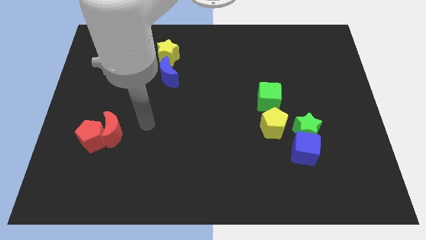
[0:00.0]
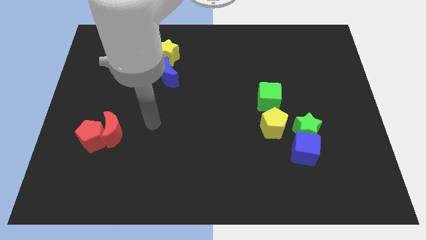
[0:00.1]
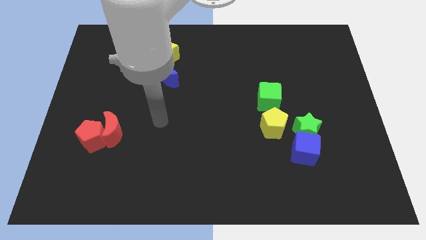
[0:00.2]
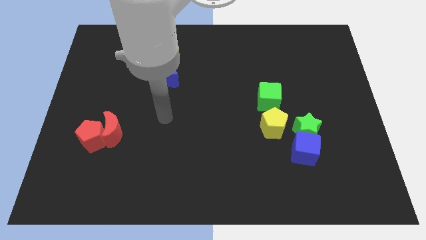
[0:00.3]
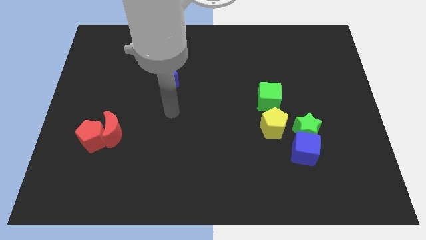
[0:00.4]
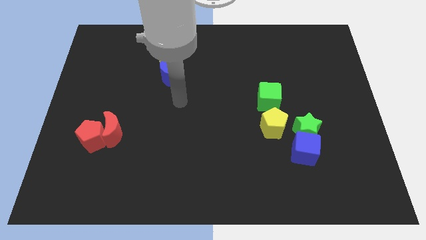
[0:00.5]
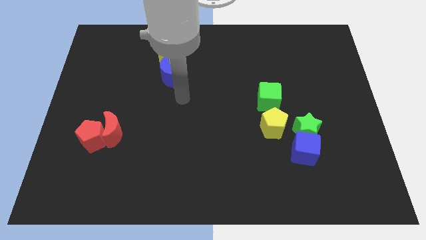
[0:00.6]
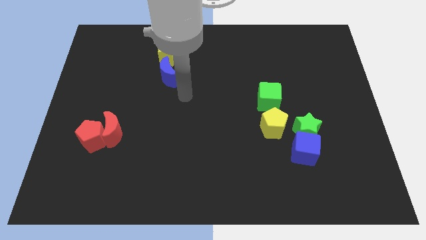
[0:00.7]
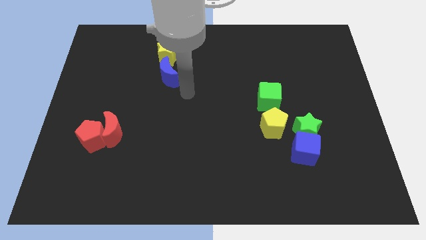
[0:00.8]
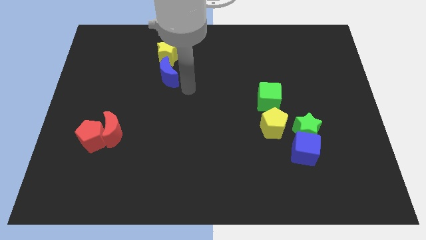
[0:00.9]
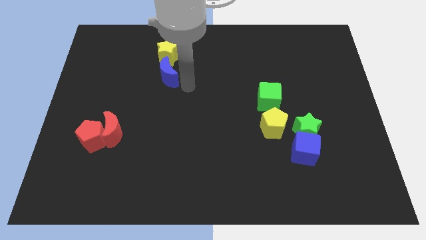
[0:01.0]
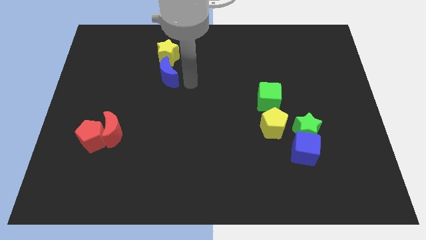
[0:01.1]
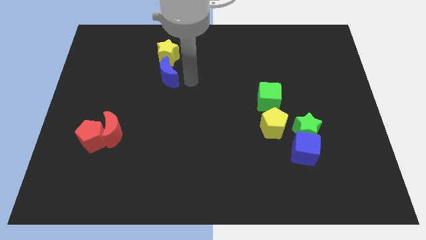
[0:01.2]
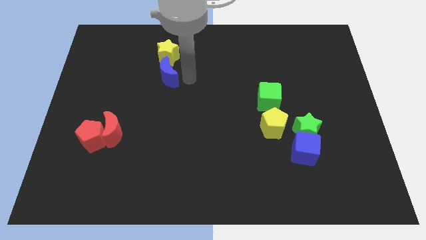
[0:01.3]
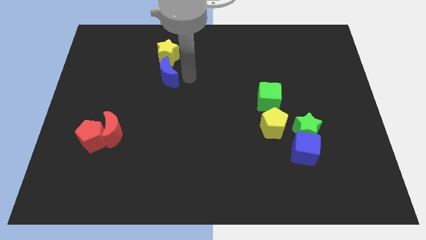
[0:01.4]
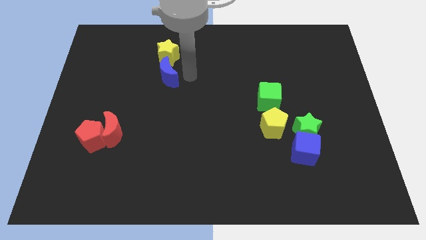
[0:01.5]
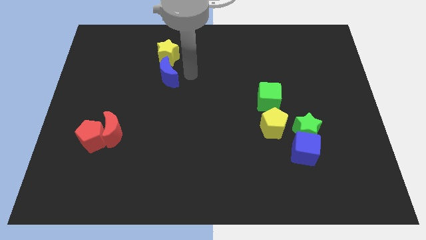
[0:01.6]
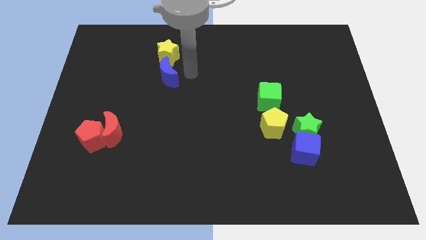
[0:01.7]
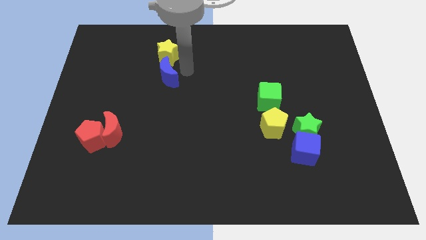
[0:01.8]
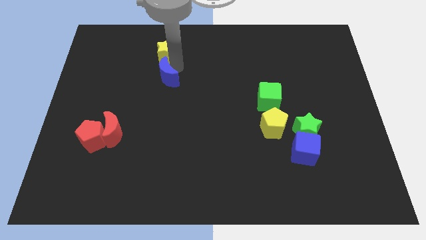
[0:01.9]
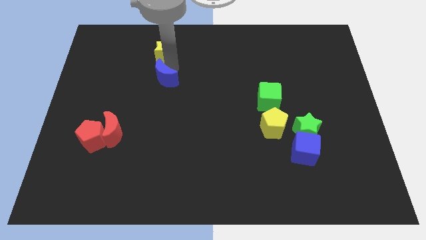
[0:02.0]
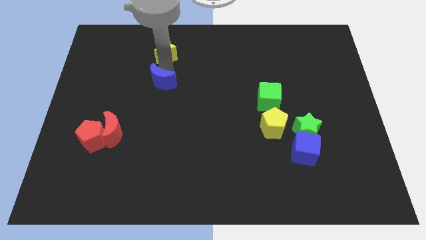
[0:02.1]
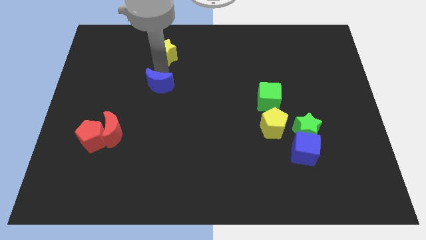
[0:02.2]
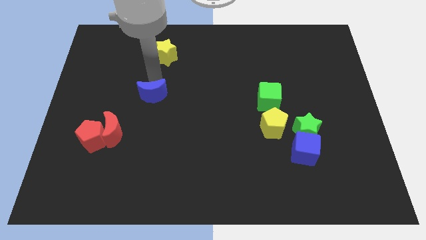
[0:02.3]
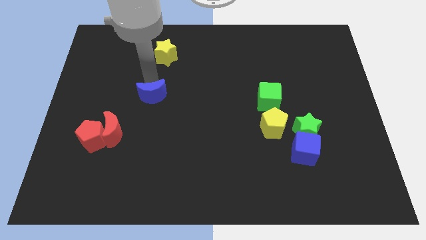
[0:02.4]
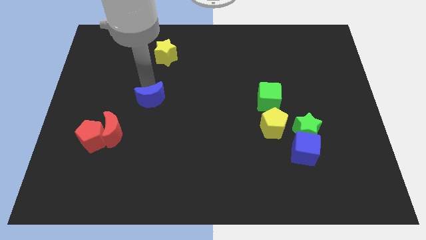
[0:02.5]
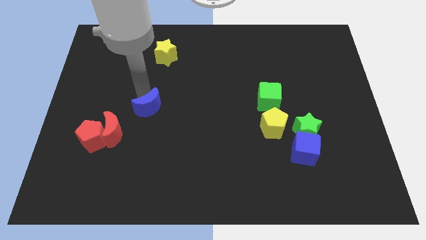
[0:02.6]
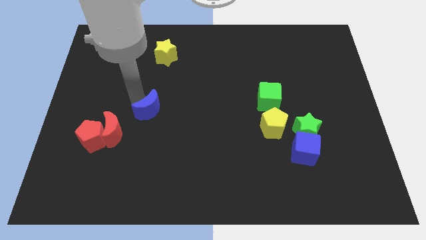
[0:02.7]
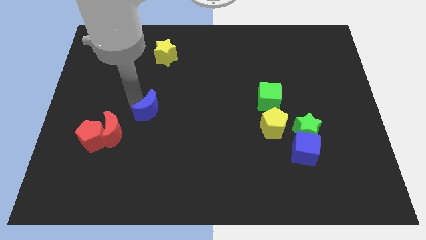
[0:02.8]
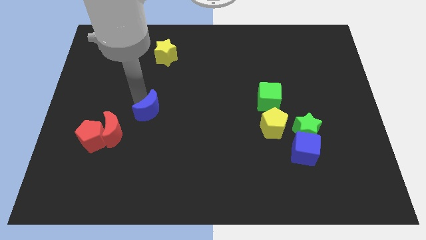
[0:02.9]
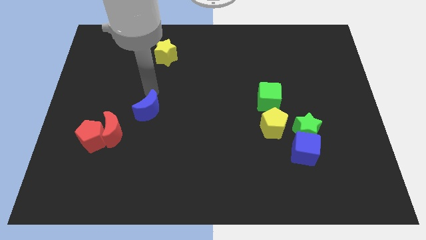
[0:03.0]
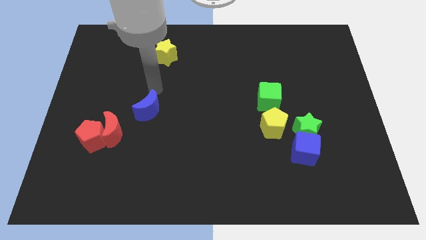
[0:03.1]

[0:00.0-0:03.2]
separate blue moon from the yellow star

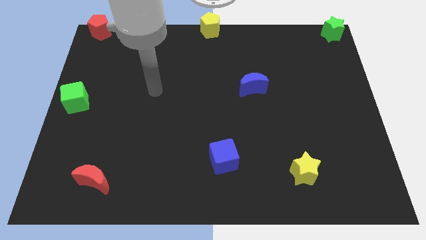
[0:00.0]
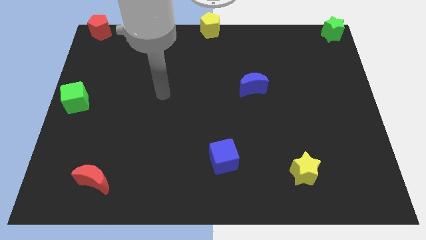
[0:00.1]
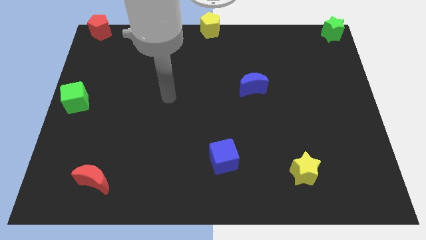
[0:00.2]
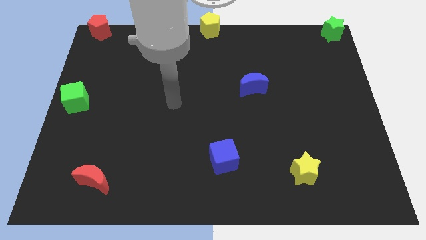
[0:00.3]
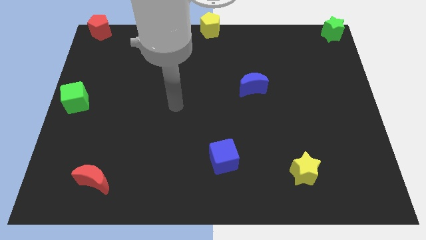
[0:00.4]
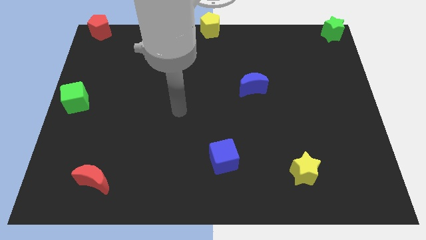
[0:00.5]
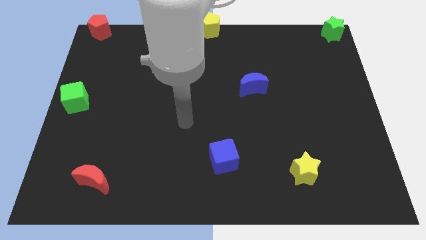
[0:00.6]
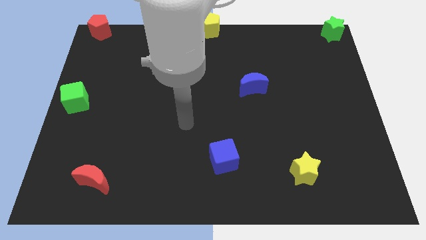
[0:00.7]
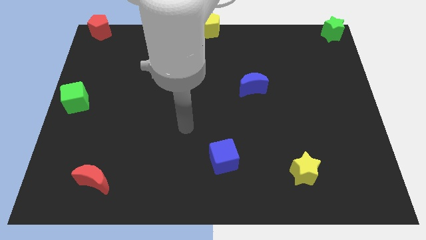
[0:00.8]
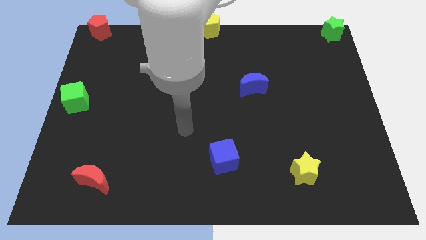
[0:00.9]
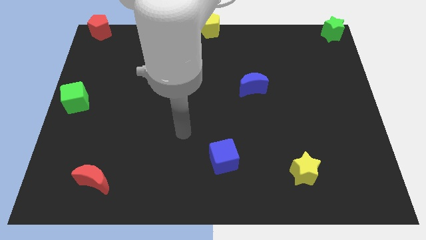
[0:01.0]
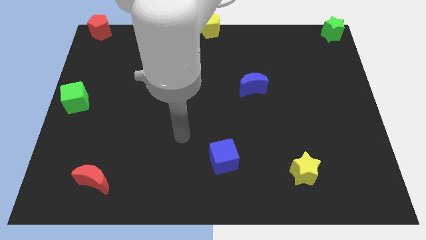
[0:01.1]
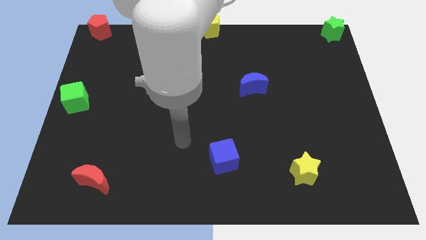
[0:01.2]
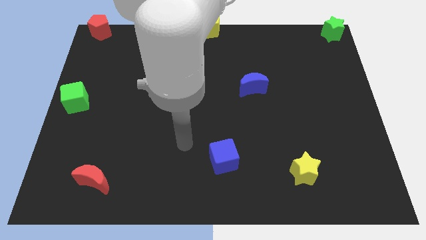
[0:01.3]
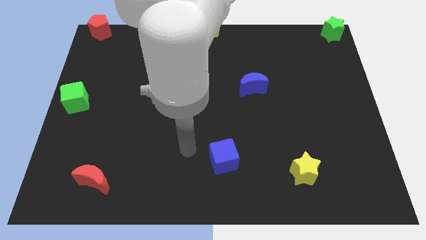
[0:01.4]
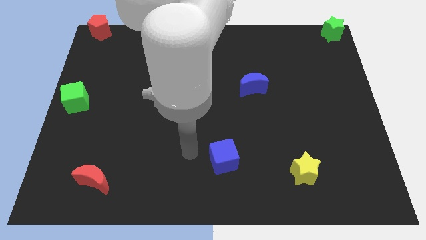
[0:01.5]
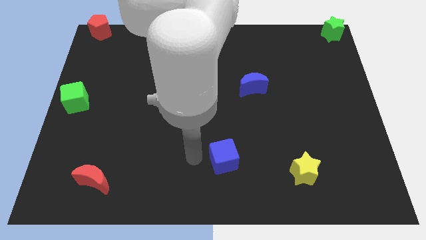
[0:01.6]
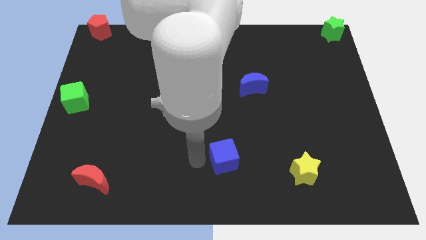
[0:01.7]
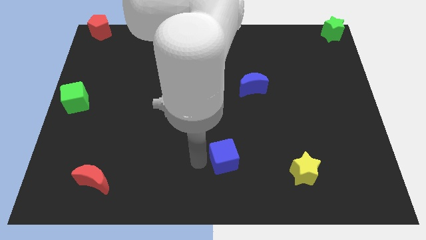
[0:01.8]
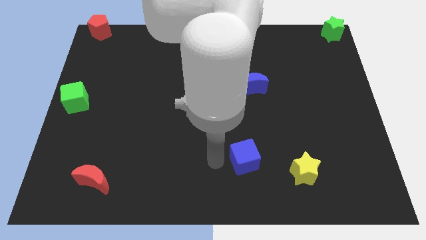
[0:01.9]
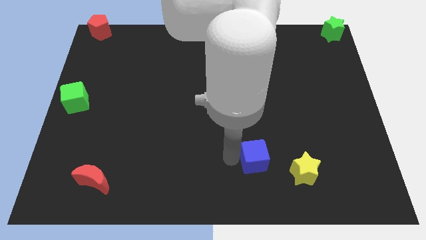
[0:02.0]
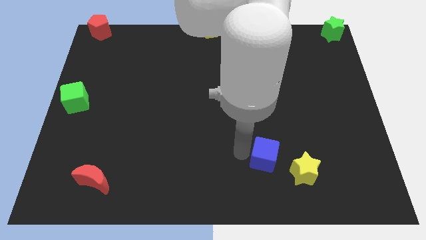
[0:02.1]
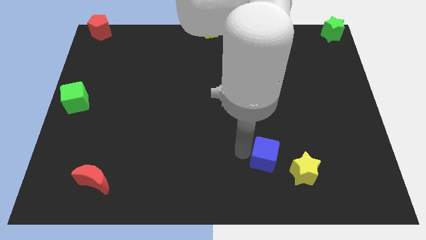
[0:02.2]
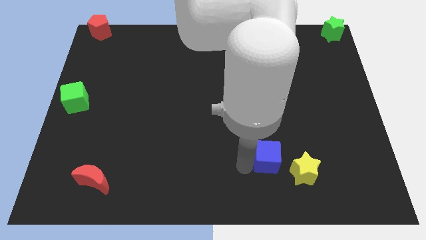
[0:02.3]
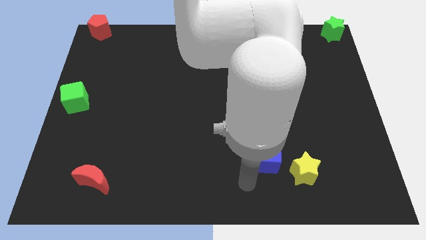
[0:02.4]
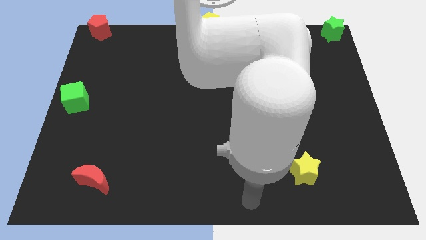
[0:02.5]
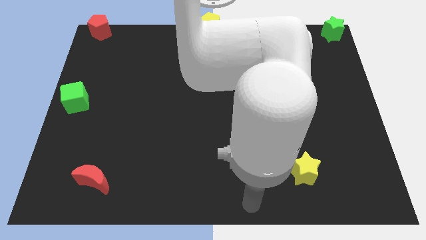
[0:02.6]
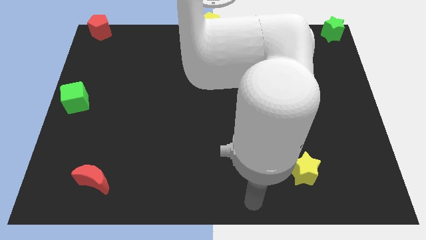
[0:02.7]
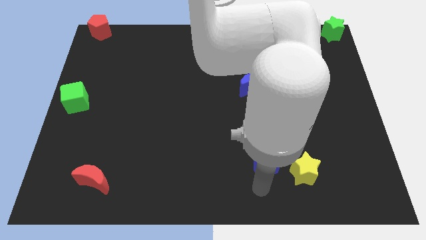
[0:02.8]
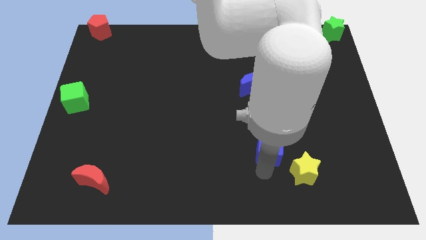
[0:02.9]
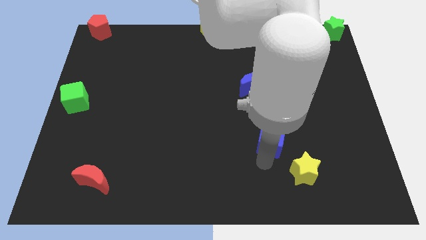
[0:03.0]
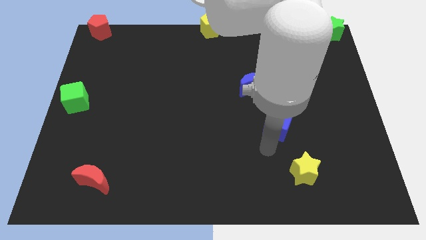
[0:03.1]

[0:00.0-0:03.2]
move the arm towards the blue cube on the board

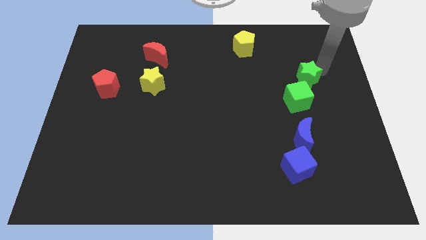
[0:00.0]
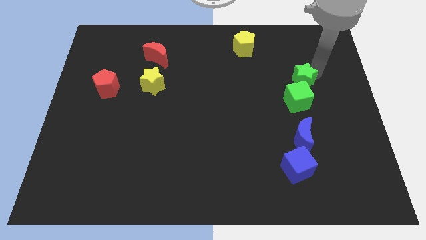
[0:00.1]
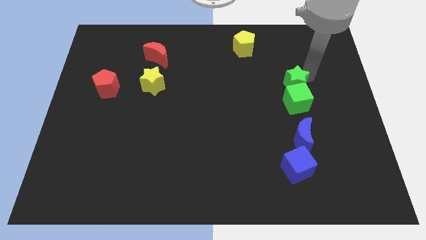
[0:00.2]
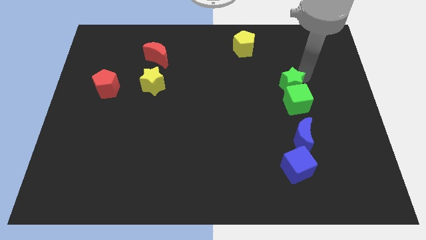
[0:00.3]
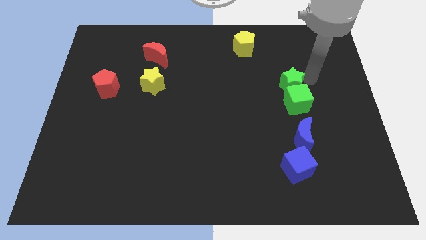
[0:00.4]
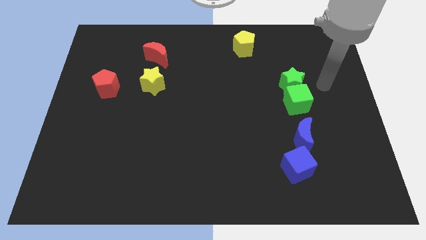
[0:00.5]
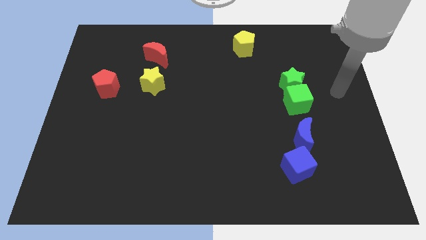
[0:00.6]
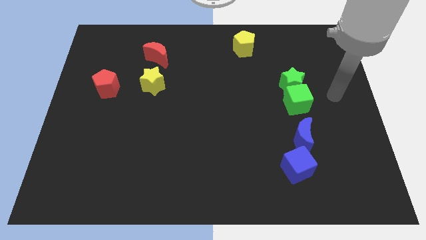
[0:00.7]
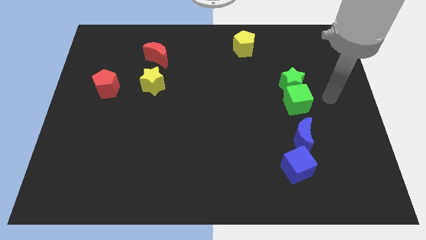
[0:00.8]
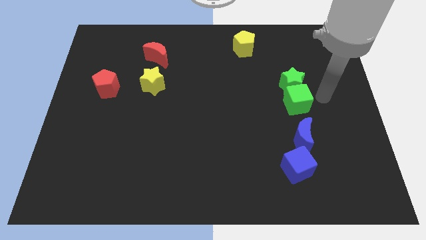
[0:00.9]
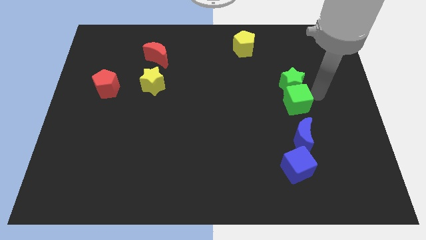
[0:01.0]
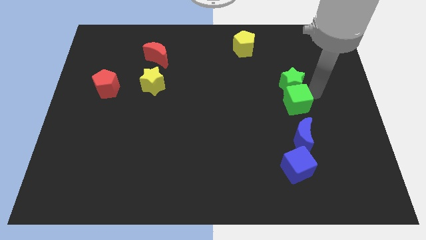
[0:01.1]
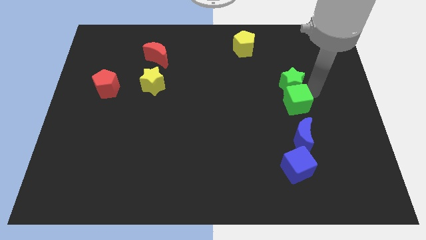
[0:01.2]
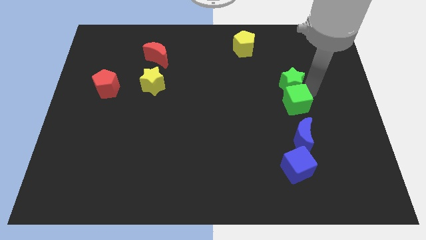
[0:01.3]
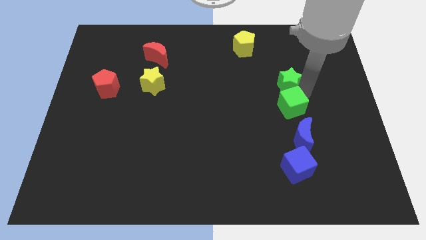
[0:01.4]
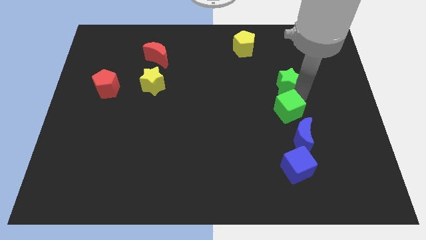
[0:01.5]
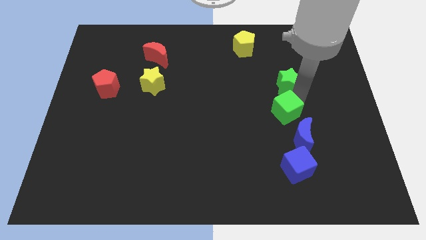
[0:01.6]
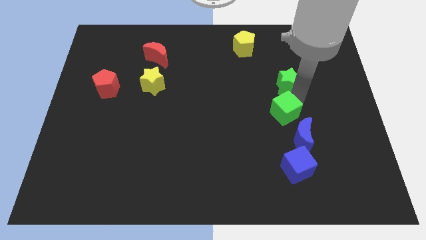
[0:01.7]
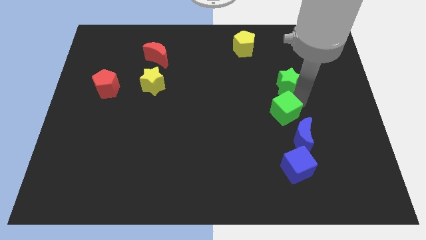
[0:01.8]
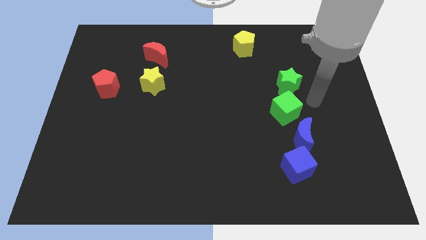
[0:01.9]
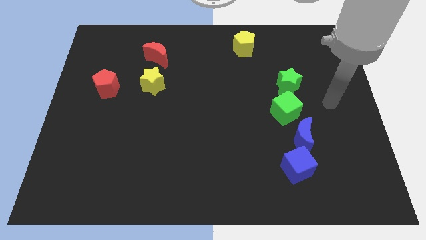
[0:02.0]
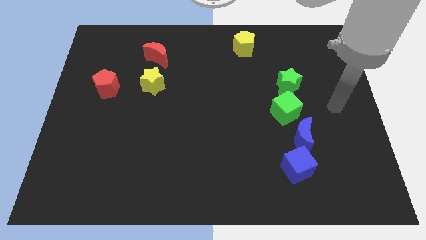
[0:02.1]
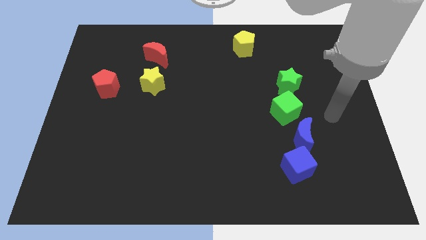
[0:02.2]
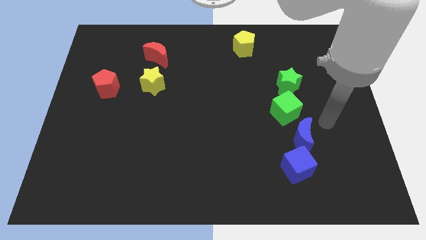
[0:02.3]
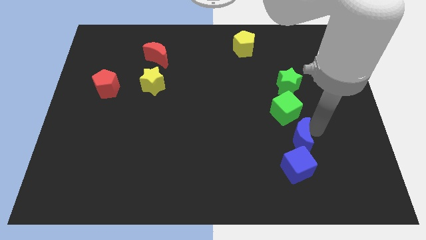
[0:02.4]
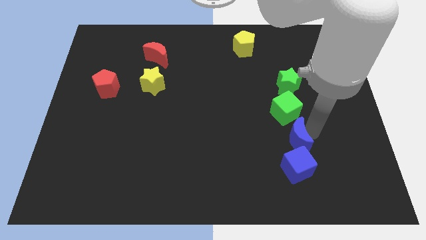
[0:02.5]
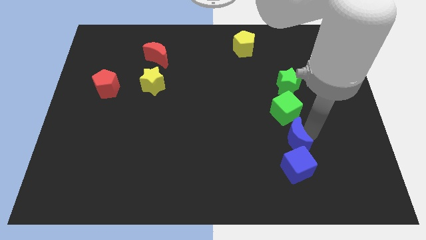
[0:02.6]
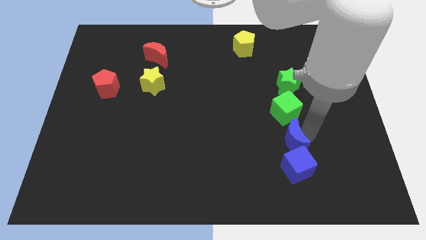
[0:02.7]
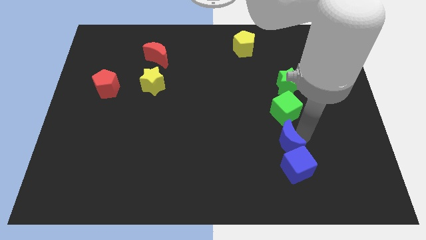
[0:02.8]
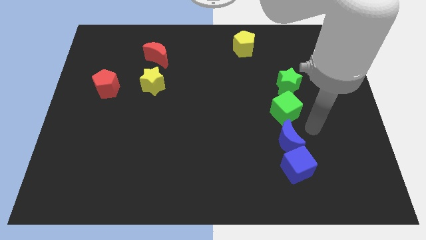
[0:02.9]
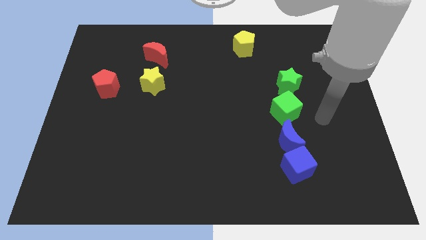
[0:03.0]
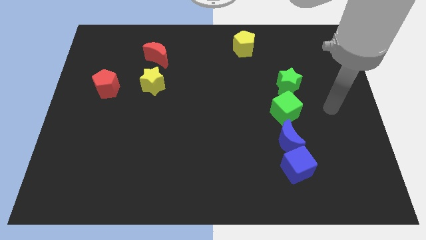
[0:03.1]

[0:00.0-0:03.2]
make a vertical line with the green star green cube and blue crescent and blue cube
